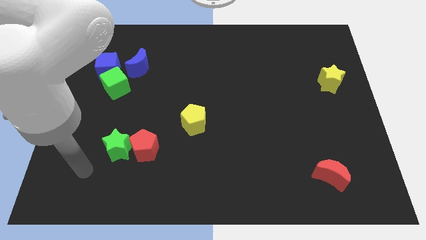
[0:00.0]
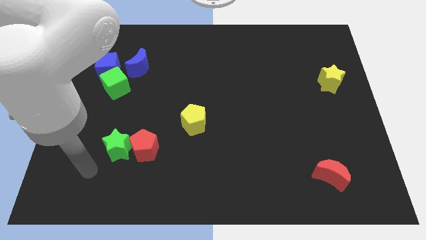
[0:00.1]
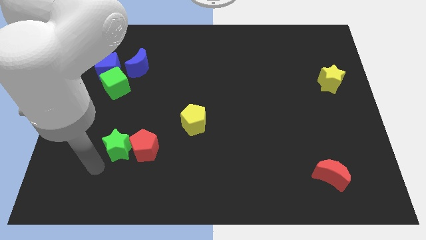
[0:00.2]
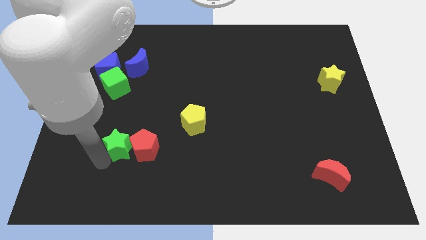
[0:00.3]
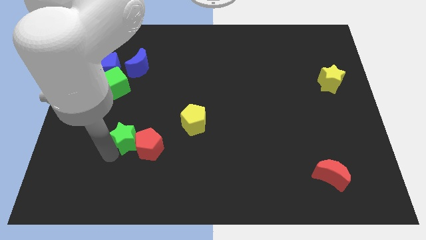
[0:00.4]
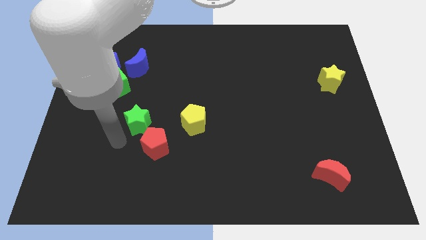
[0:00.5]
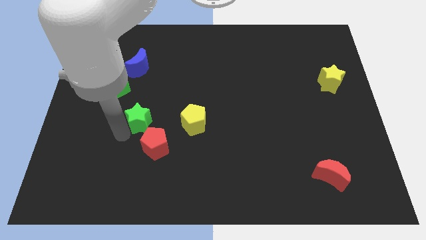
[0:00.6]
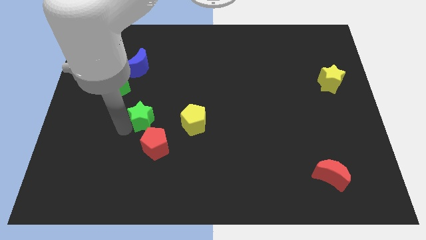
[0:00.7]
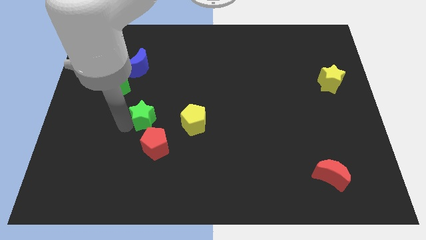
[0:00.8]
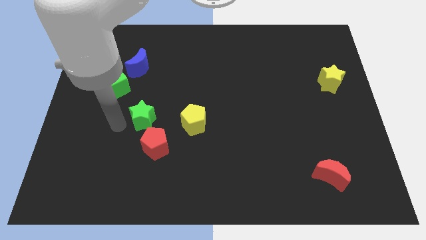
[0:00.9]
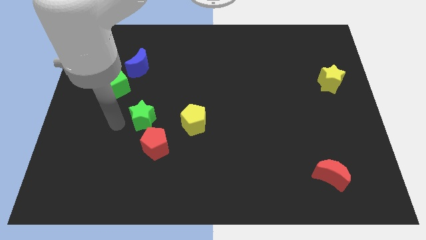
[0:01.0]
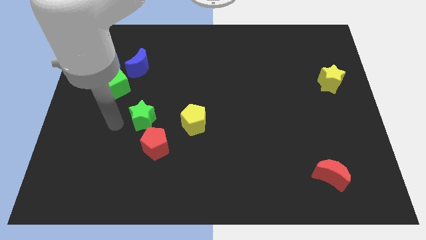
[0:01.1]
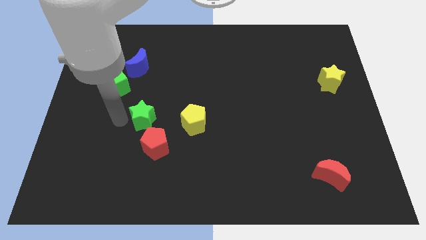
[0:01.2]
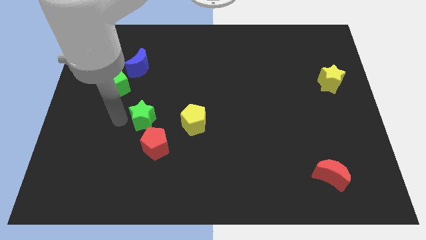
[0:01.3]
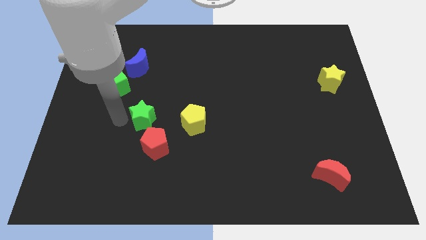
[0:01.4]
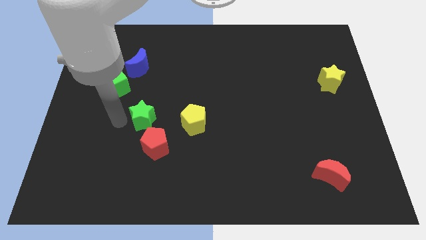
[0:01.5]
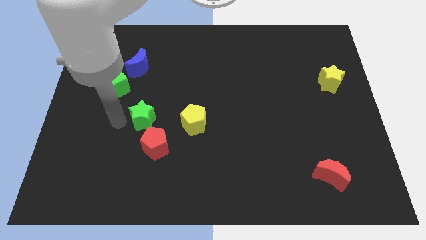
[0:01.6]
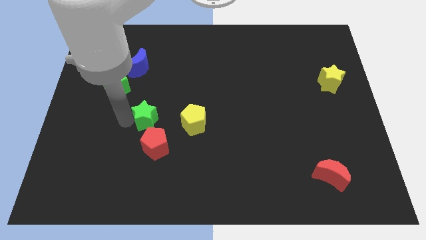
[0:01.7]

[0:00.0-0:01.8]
move the green star to the top of the red pentagon

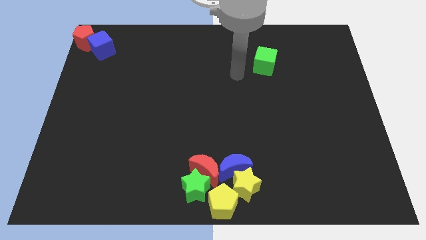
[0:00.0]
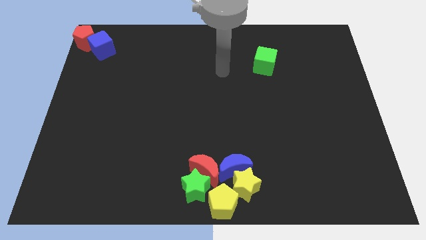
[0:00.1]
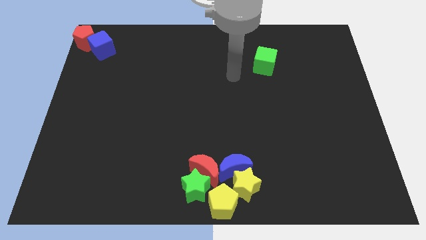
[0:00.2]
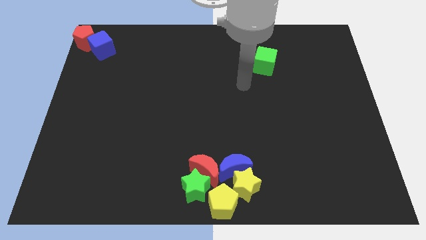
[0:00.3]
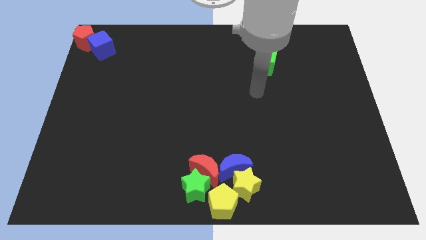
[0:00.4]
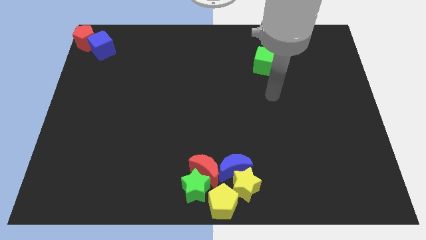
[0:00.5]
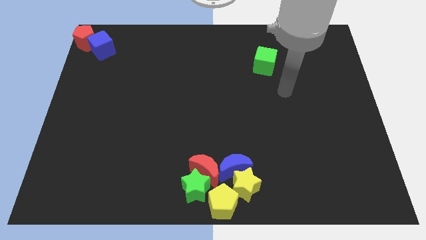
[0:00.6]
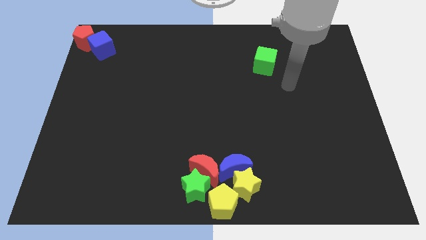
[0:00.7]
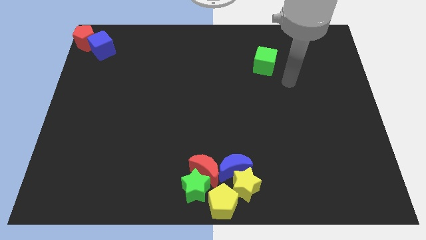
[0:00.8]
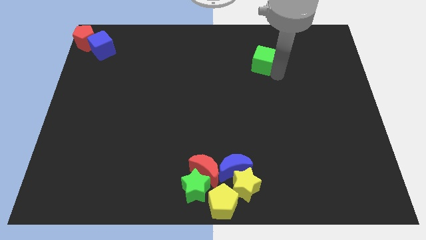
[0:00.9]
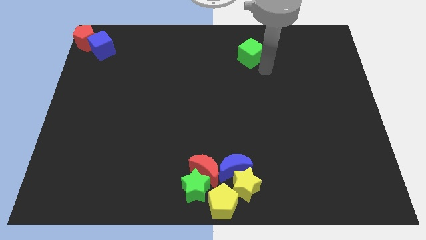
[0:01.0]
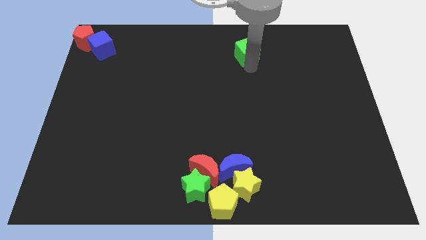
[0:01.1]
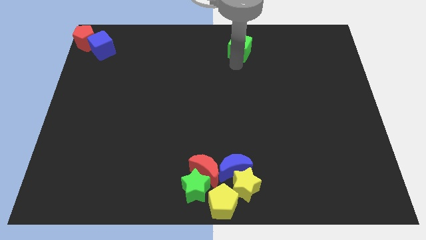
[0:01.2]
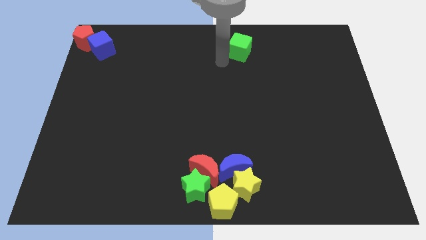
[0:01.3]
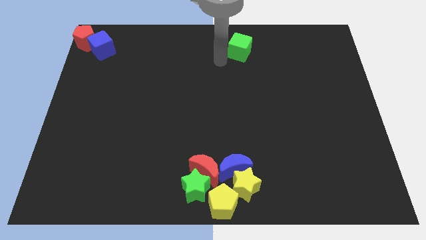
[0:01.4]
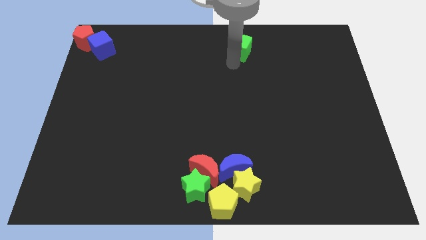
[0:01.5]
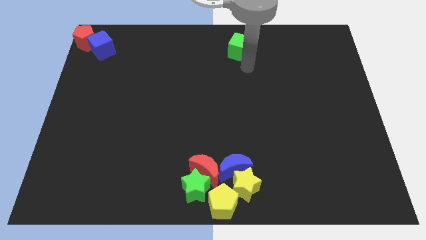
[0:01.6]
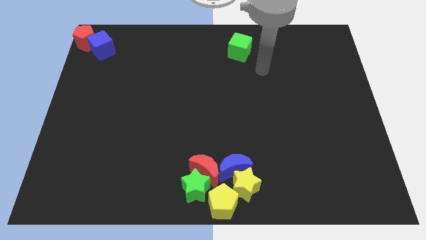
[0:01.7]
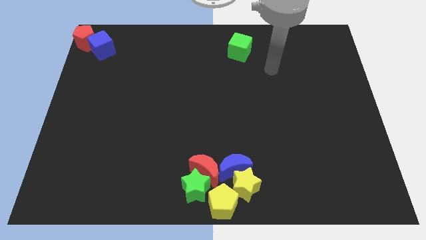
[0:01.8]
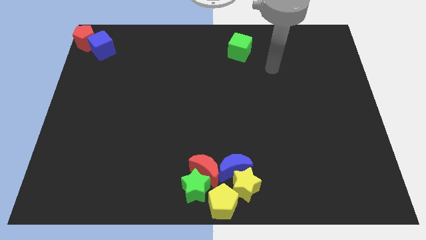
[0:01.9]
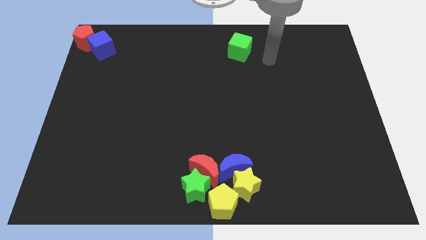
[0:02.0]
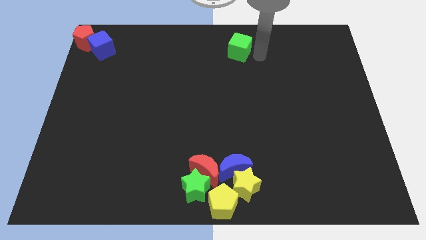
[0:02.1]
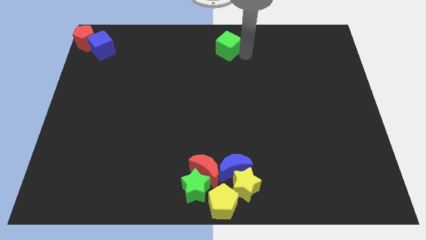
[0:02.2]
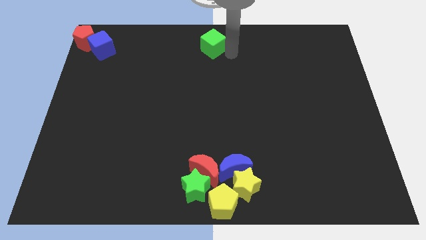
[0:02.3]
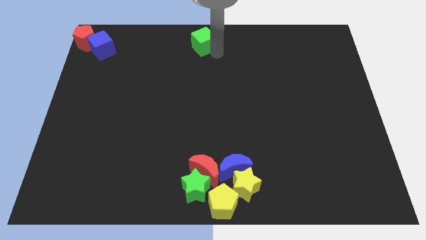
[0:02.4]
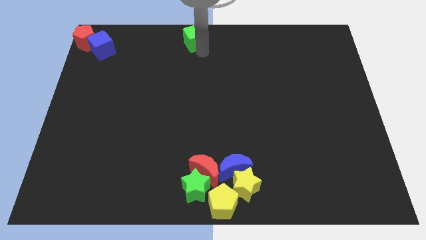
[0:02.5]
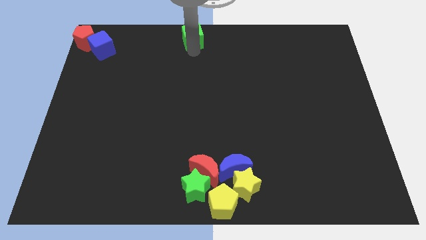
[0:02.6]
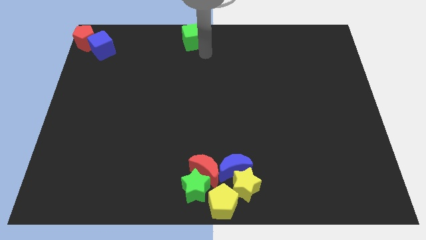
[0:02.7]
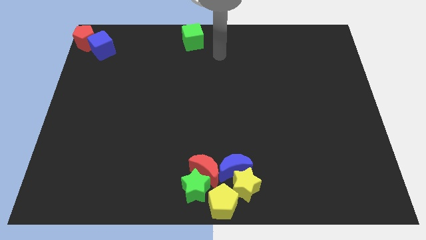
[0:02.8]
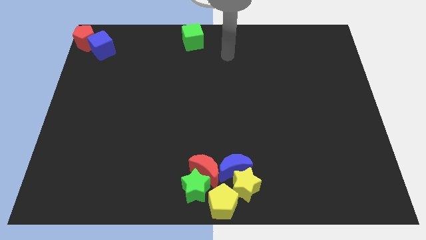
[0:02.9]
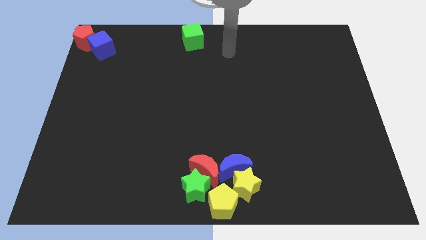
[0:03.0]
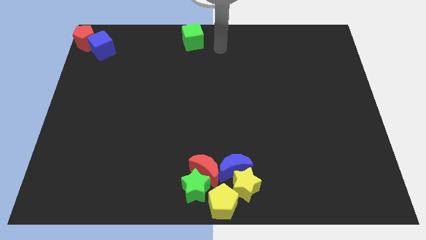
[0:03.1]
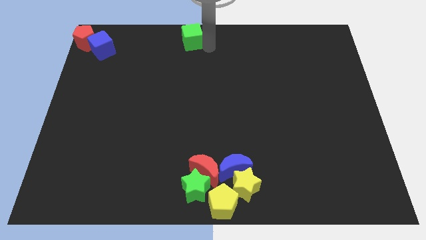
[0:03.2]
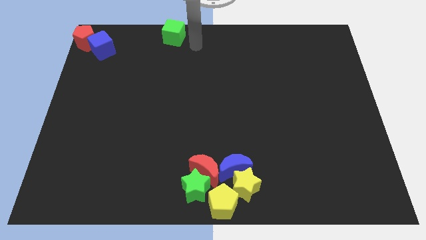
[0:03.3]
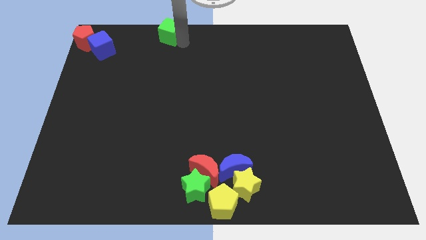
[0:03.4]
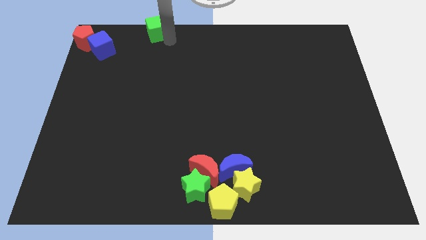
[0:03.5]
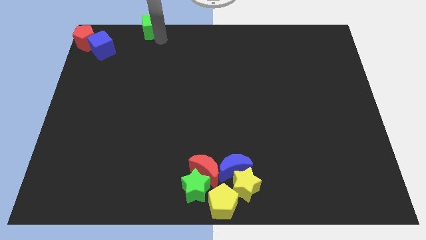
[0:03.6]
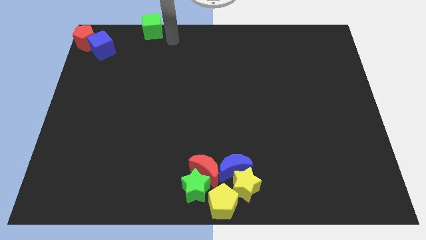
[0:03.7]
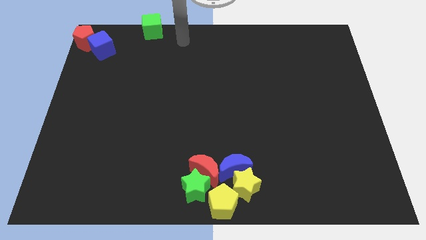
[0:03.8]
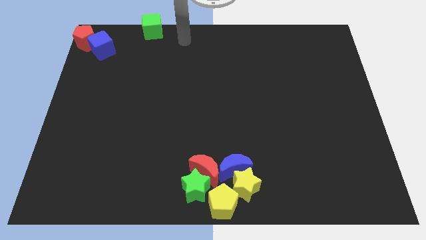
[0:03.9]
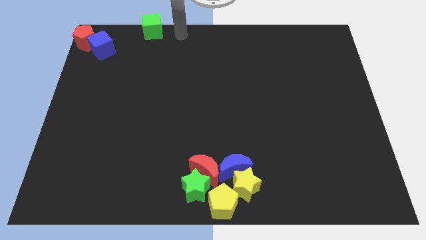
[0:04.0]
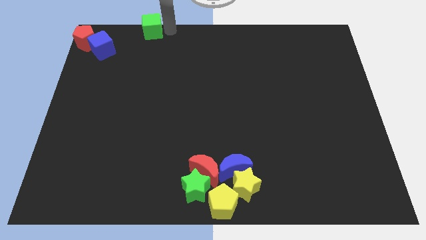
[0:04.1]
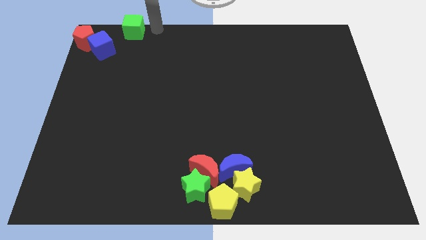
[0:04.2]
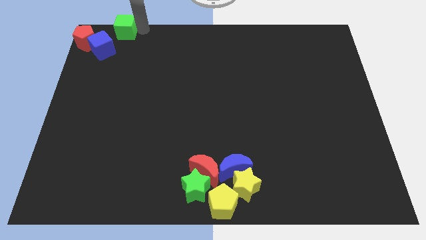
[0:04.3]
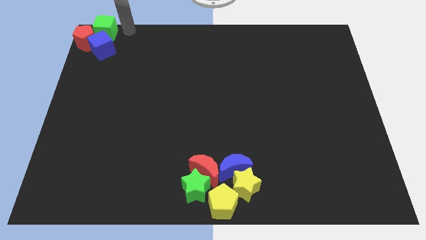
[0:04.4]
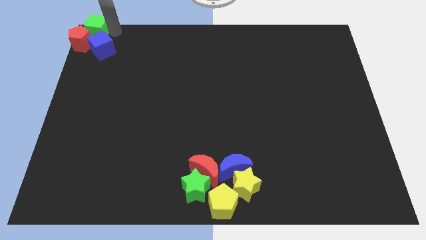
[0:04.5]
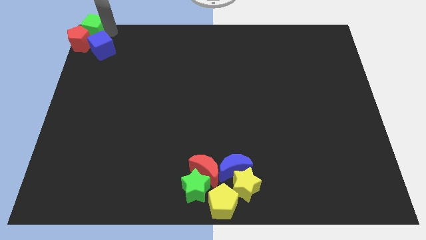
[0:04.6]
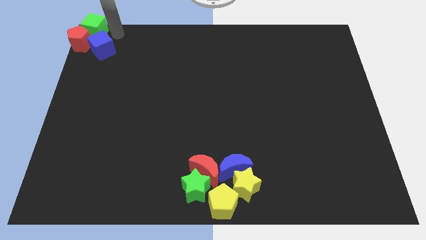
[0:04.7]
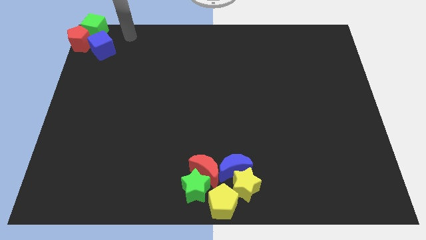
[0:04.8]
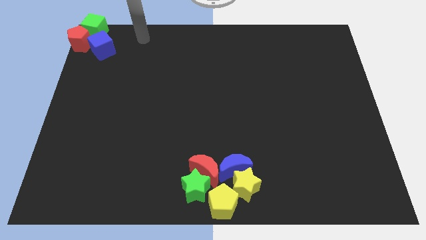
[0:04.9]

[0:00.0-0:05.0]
push the green cube into the red pentagon

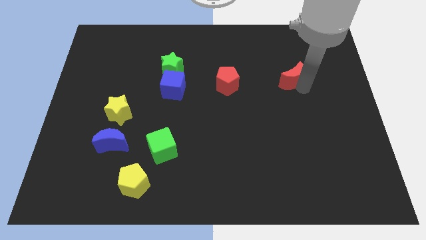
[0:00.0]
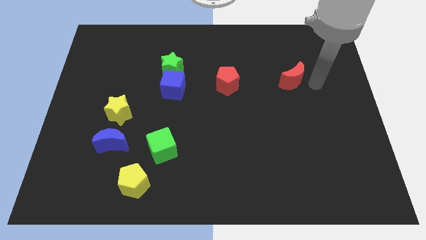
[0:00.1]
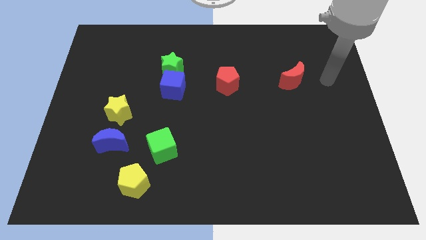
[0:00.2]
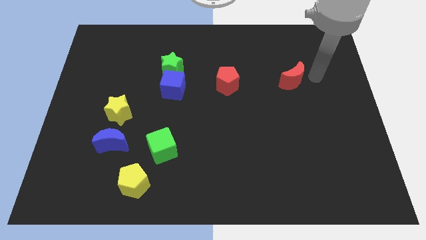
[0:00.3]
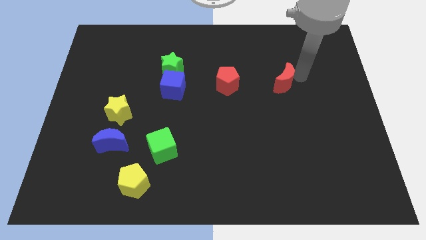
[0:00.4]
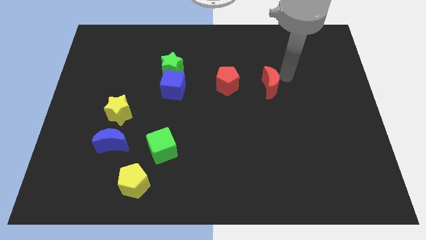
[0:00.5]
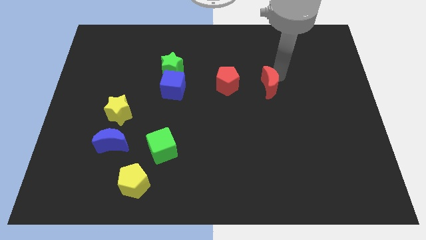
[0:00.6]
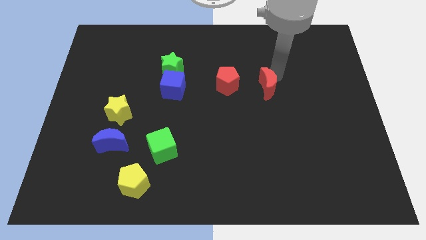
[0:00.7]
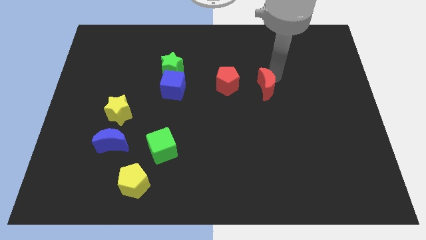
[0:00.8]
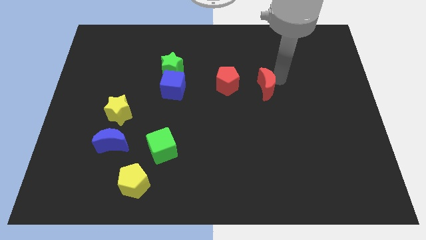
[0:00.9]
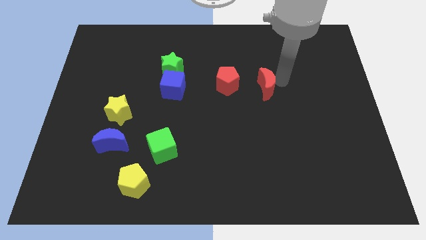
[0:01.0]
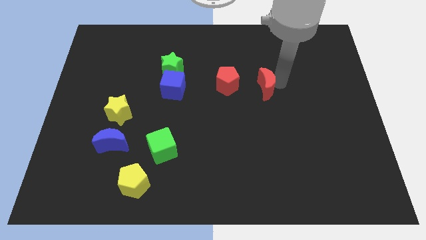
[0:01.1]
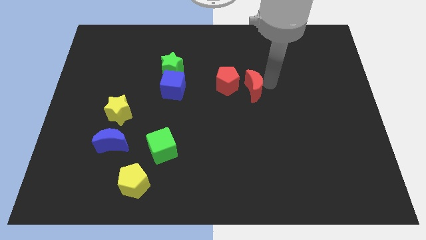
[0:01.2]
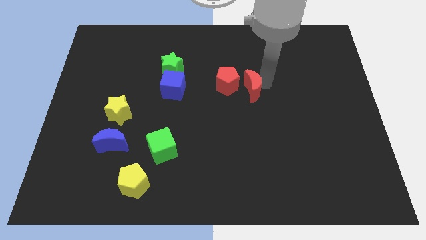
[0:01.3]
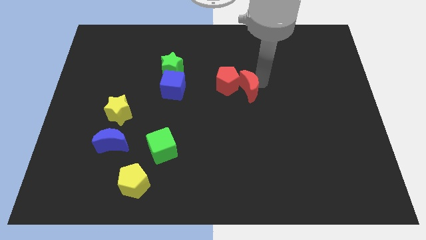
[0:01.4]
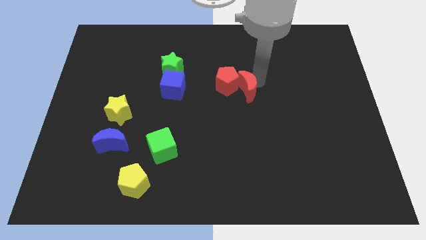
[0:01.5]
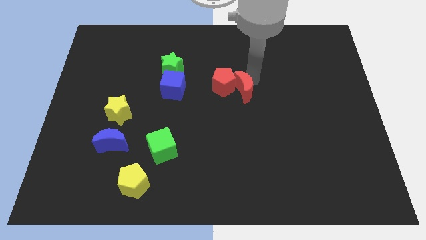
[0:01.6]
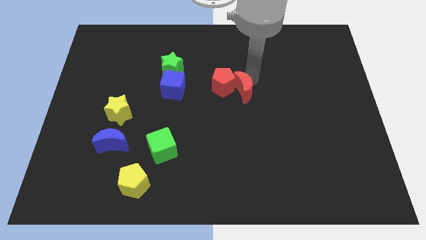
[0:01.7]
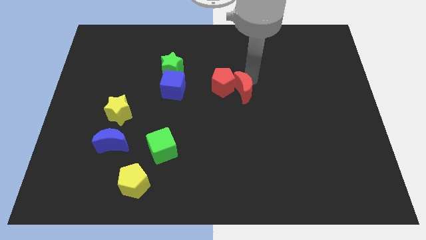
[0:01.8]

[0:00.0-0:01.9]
push the red moon into the red pentagon
